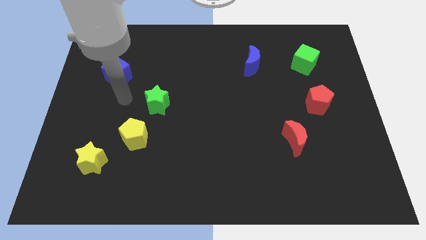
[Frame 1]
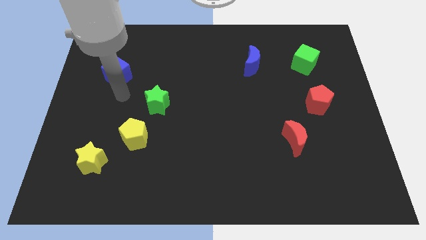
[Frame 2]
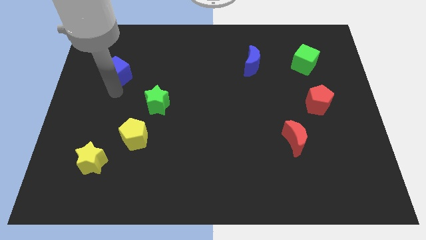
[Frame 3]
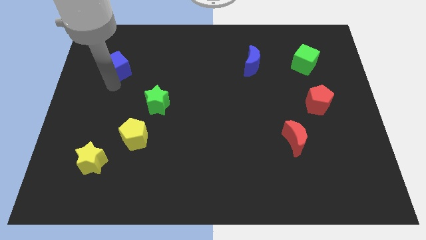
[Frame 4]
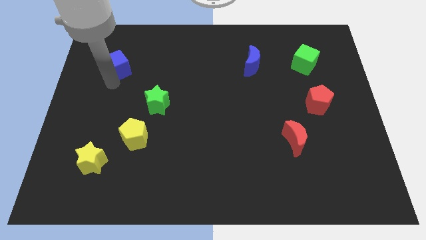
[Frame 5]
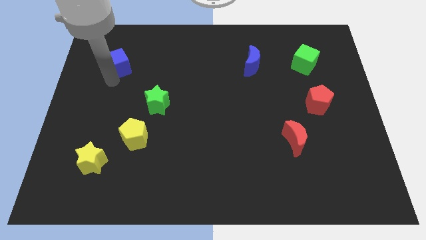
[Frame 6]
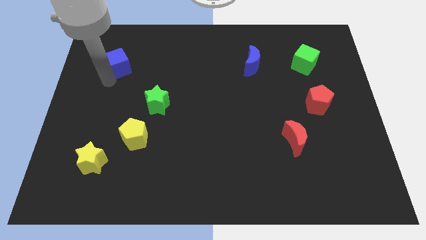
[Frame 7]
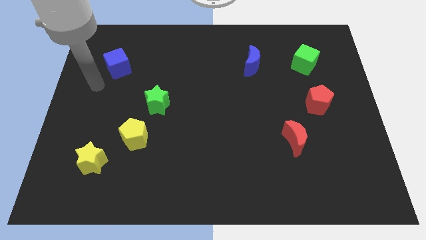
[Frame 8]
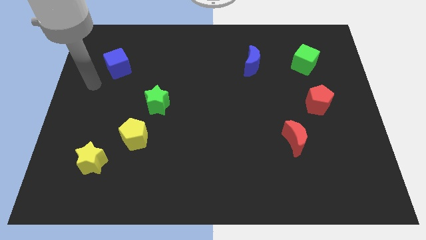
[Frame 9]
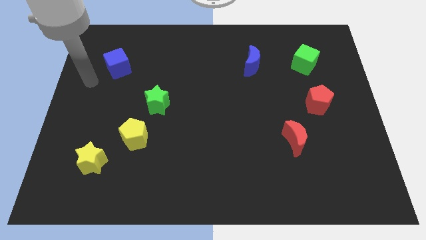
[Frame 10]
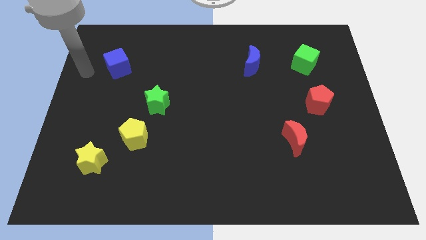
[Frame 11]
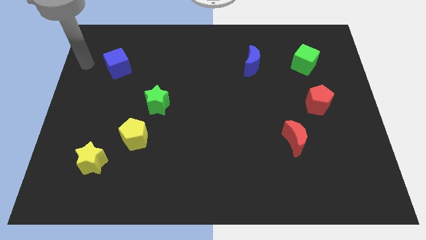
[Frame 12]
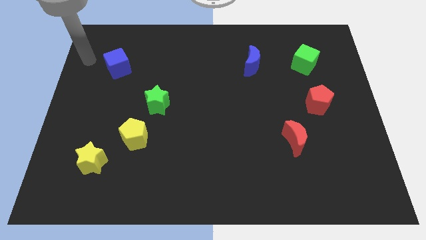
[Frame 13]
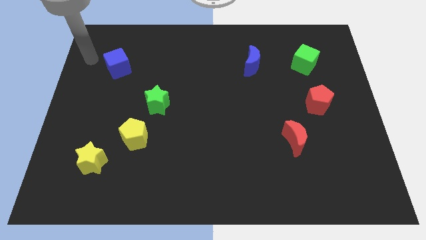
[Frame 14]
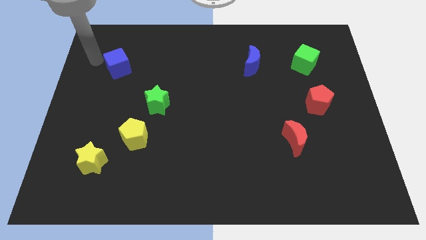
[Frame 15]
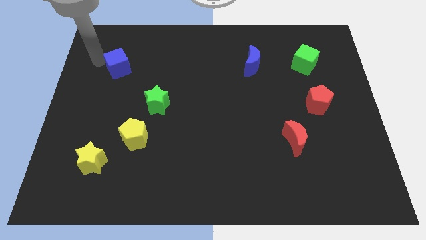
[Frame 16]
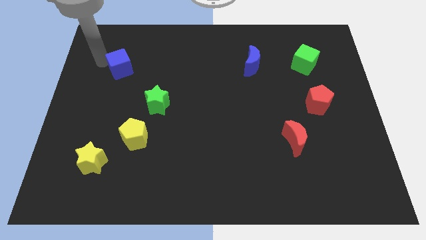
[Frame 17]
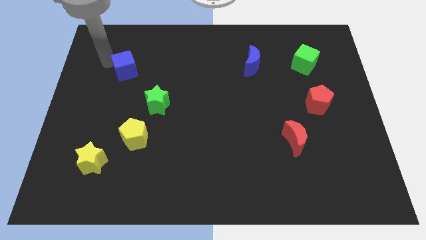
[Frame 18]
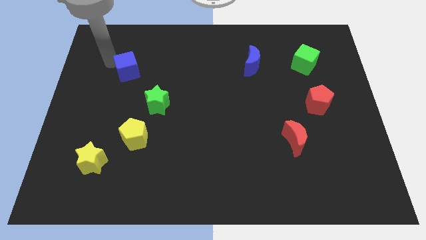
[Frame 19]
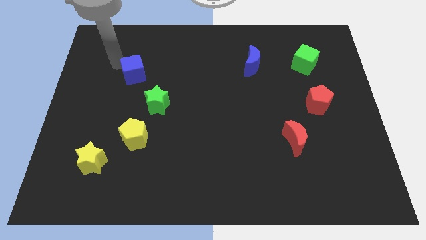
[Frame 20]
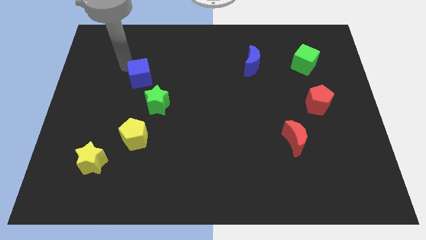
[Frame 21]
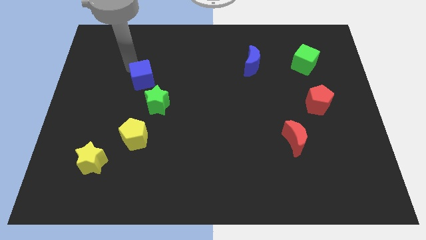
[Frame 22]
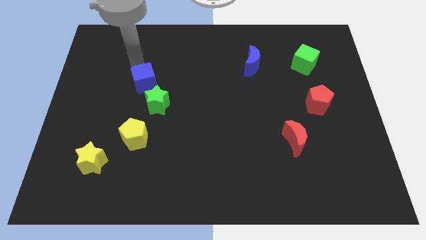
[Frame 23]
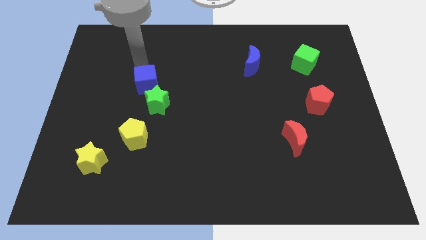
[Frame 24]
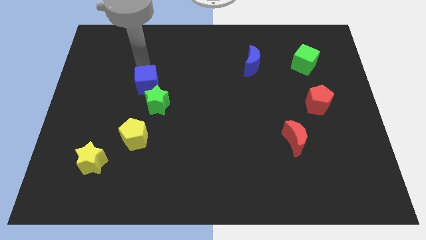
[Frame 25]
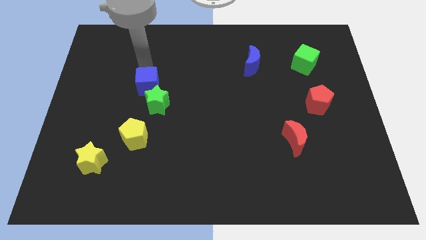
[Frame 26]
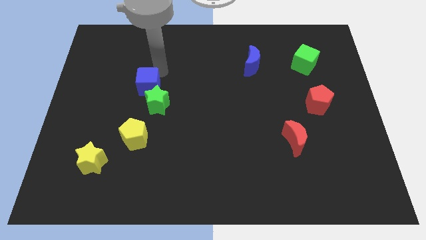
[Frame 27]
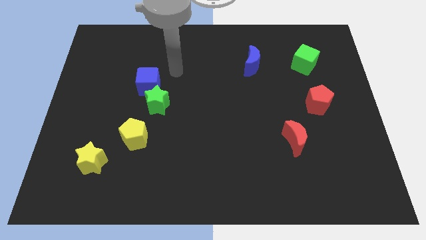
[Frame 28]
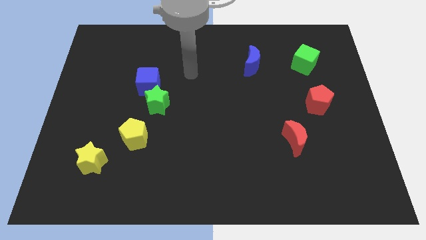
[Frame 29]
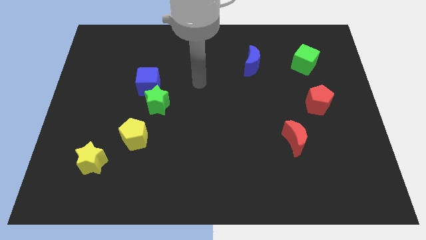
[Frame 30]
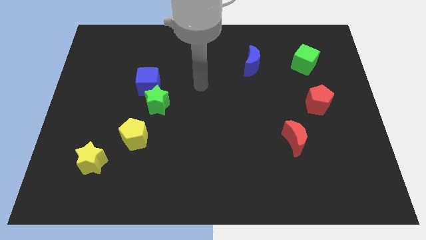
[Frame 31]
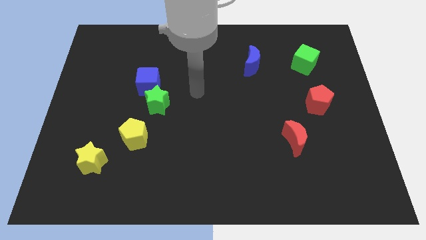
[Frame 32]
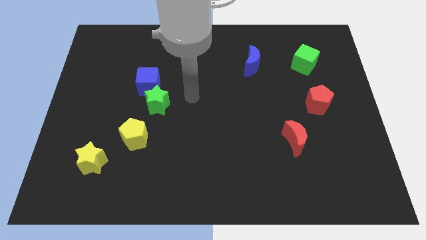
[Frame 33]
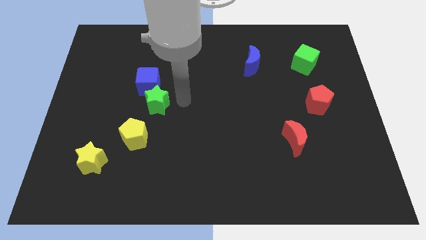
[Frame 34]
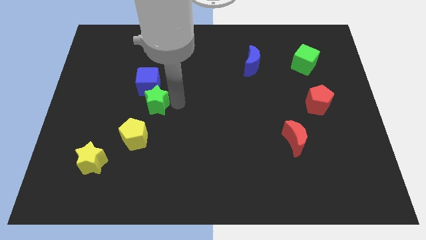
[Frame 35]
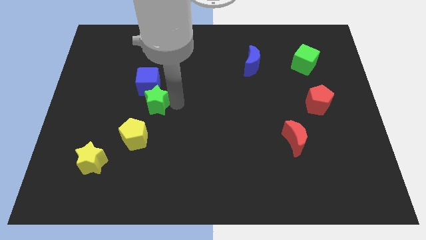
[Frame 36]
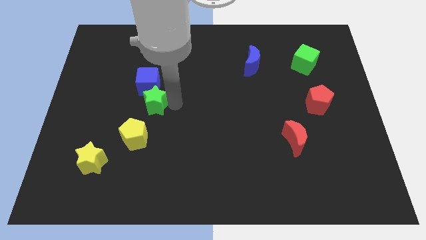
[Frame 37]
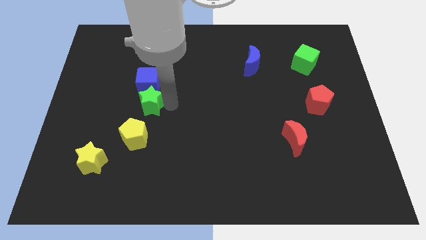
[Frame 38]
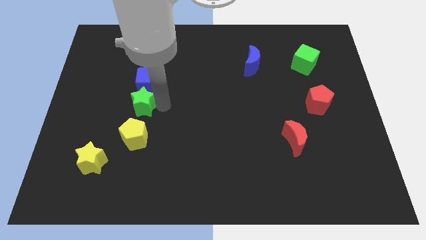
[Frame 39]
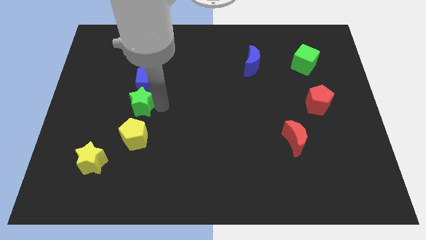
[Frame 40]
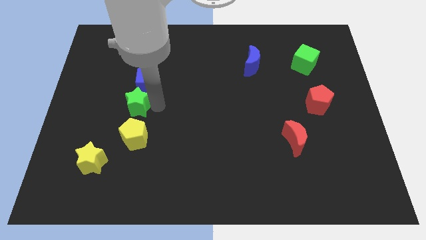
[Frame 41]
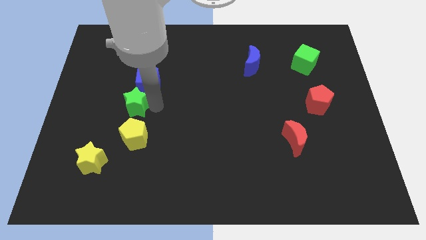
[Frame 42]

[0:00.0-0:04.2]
place blue cube above green star

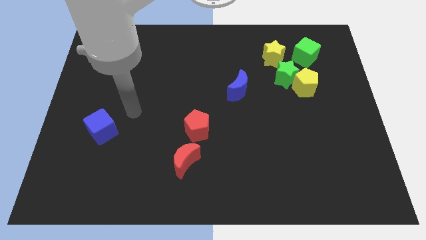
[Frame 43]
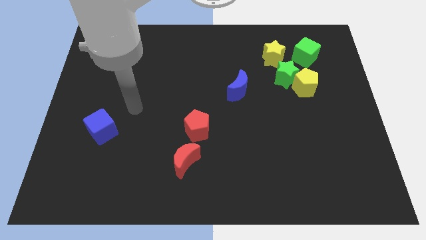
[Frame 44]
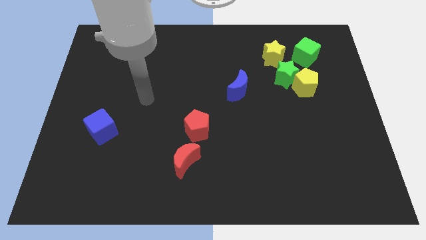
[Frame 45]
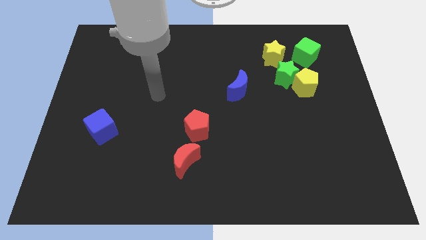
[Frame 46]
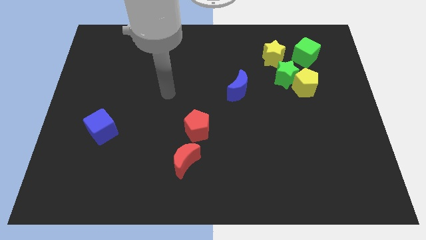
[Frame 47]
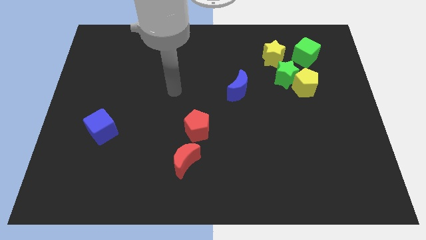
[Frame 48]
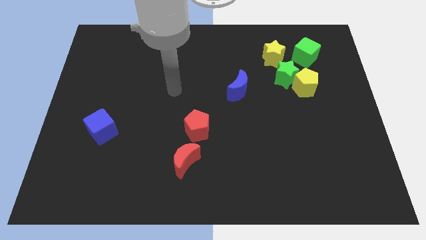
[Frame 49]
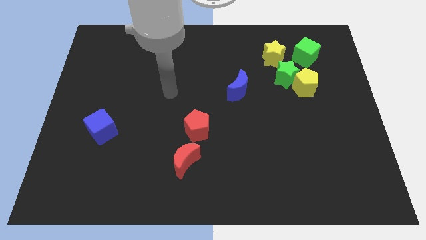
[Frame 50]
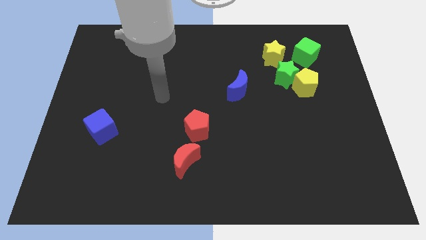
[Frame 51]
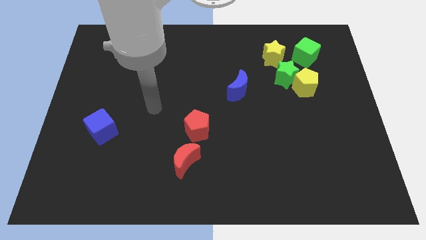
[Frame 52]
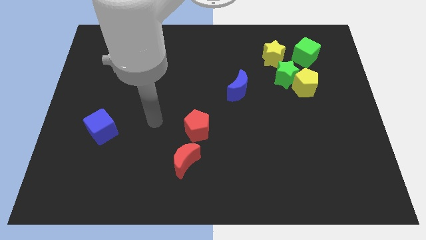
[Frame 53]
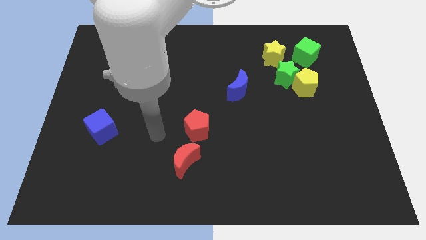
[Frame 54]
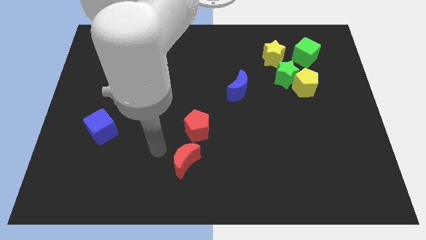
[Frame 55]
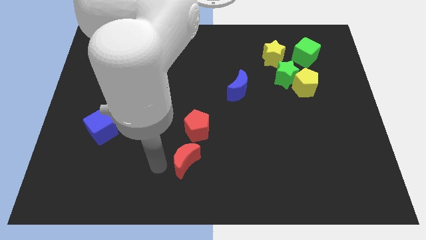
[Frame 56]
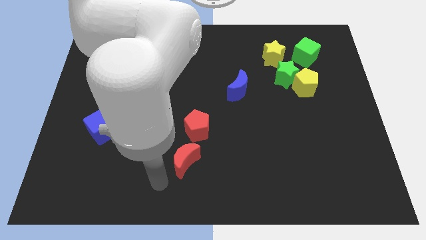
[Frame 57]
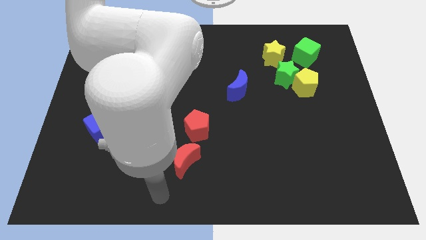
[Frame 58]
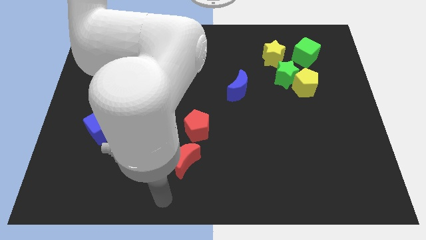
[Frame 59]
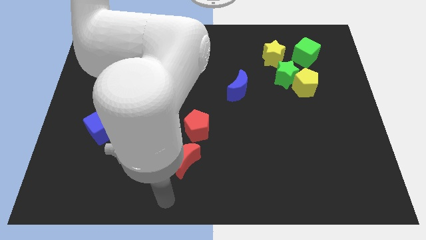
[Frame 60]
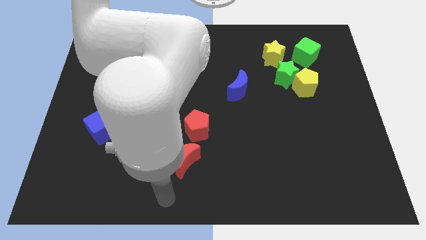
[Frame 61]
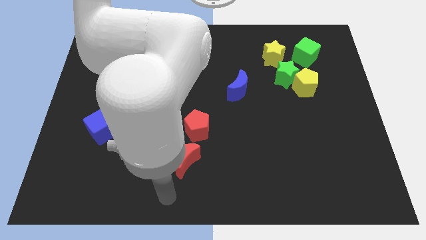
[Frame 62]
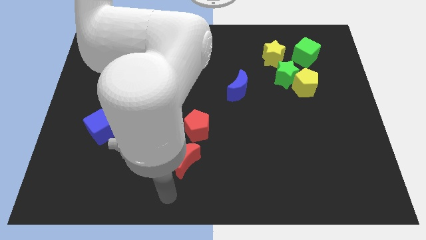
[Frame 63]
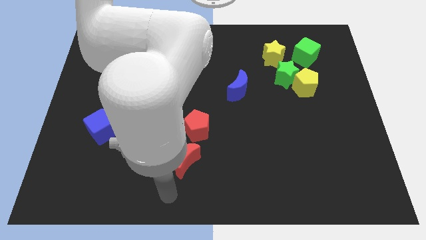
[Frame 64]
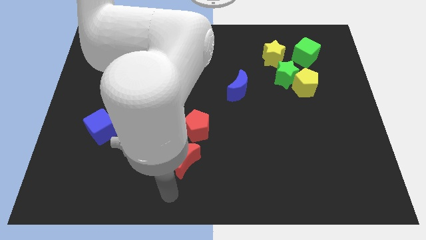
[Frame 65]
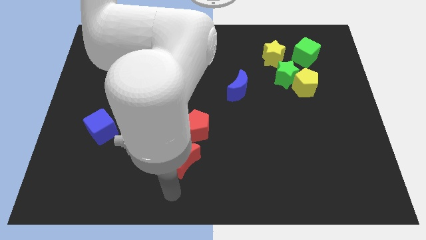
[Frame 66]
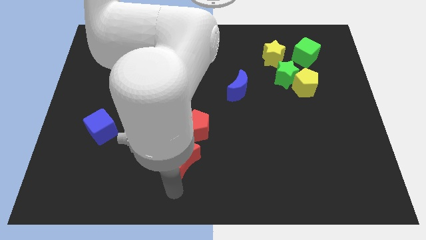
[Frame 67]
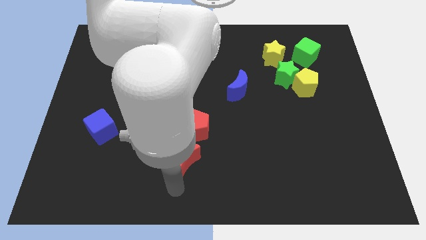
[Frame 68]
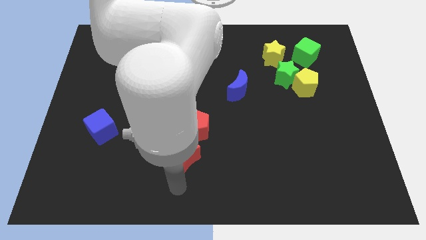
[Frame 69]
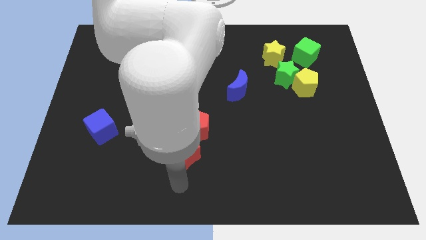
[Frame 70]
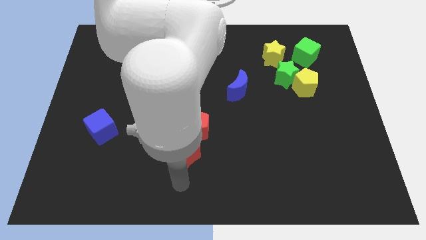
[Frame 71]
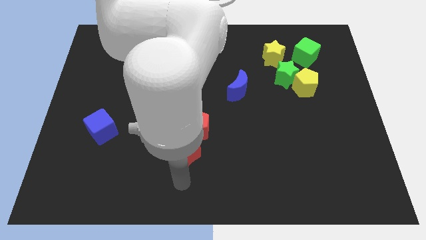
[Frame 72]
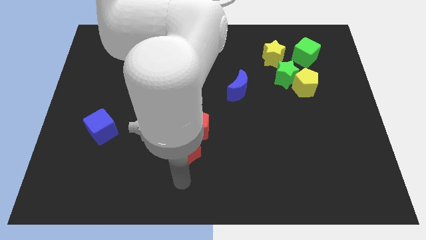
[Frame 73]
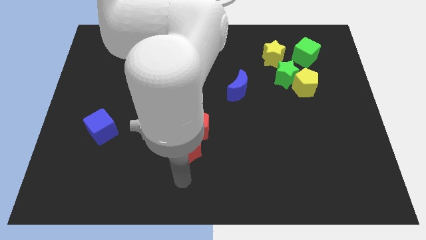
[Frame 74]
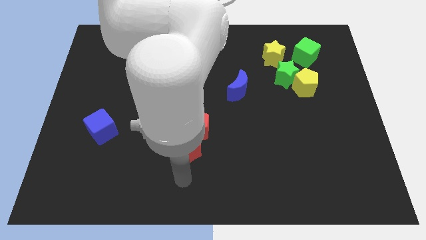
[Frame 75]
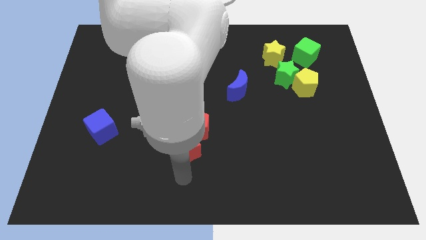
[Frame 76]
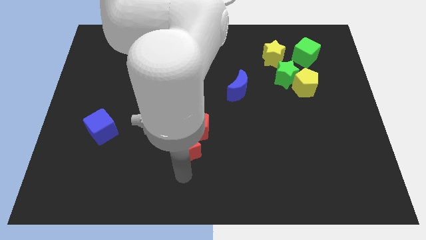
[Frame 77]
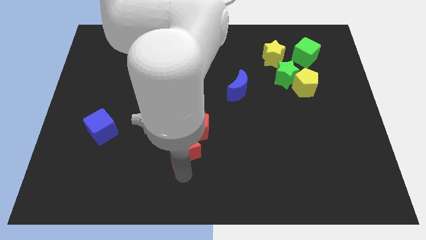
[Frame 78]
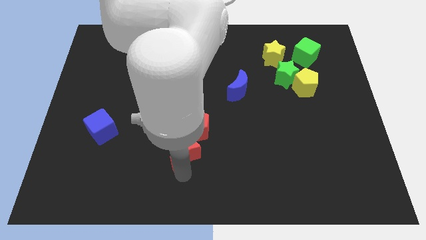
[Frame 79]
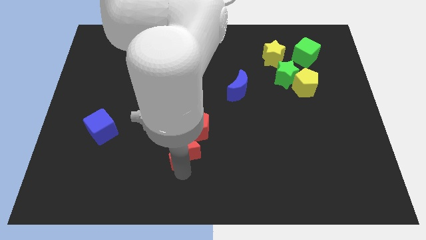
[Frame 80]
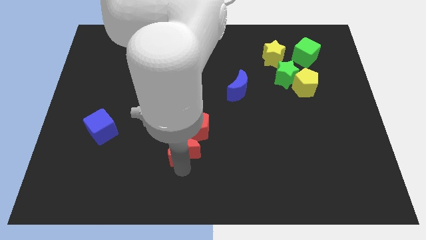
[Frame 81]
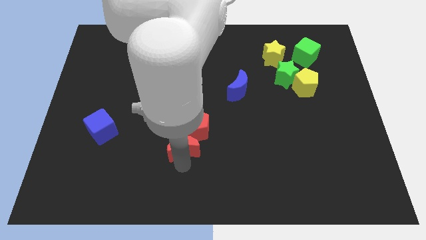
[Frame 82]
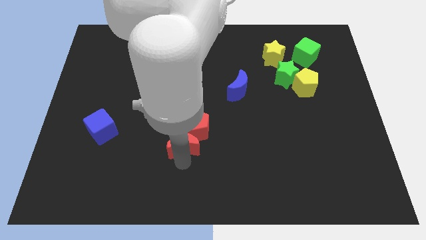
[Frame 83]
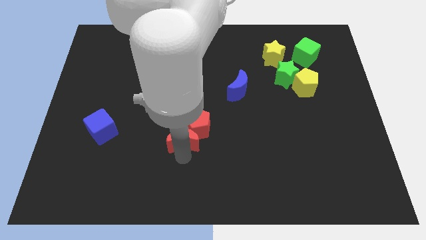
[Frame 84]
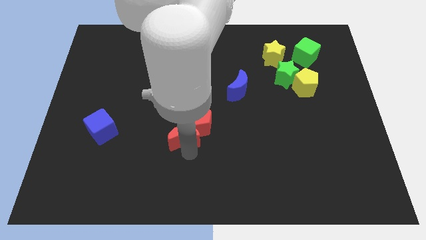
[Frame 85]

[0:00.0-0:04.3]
move the red crescent into the bottom side of the red pentagon

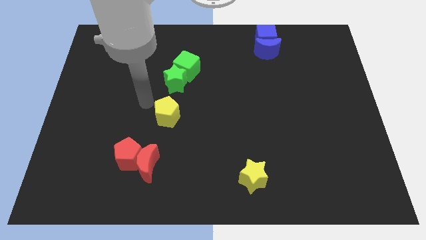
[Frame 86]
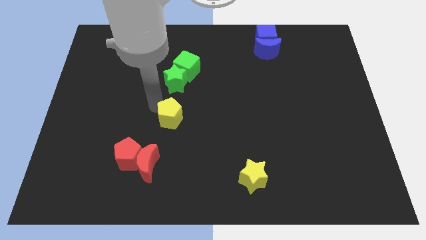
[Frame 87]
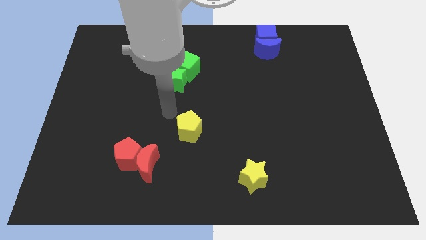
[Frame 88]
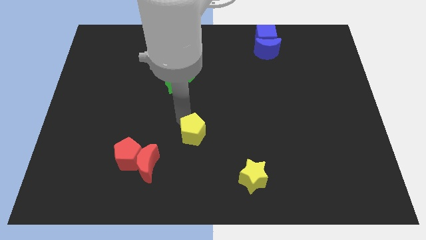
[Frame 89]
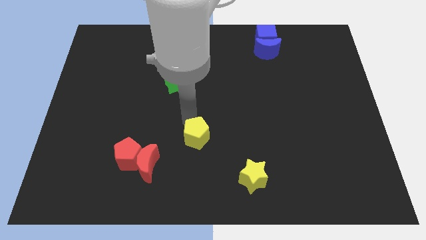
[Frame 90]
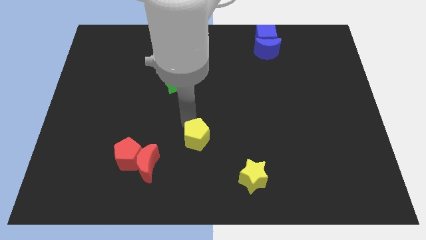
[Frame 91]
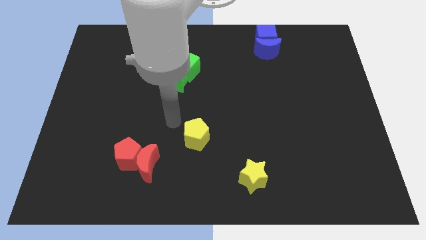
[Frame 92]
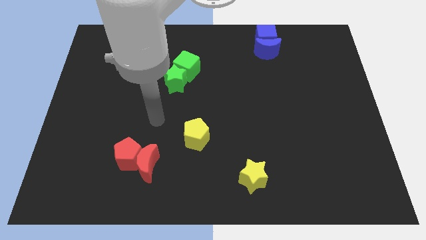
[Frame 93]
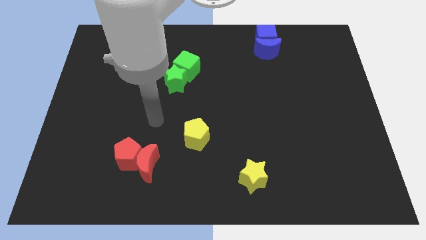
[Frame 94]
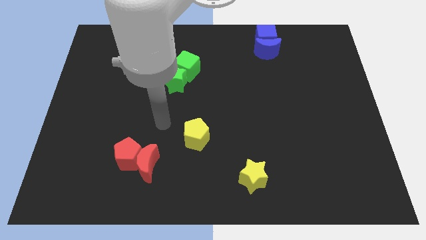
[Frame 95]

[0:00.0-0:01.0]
move the yellow pentagon diagonally to the red moon
